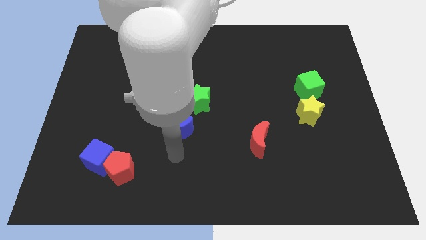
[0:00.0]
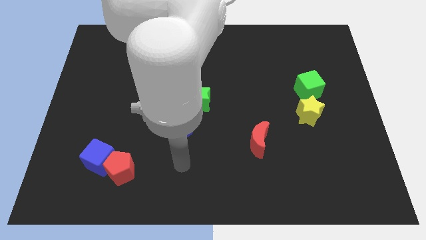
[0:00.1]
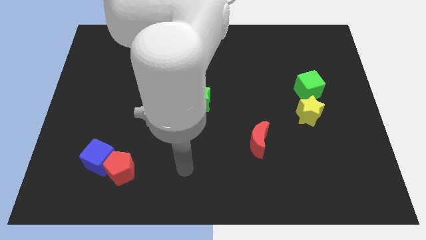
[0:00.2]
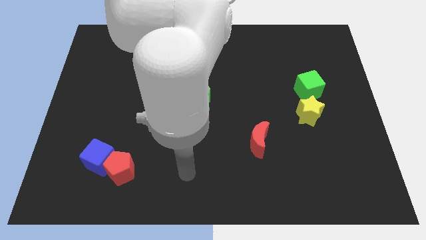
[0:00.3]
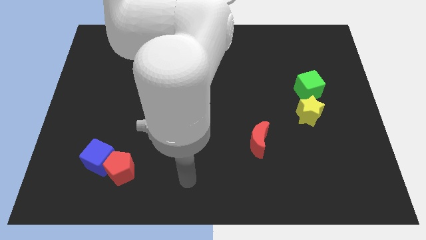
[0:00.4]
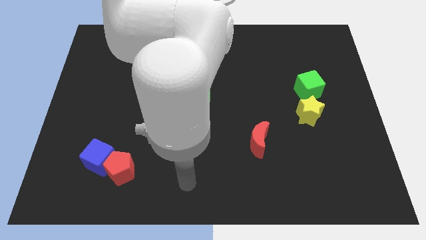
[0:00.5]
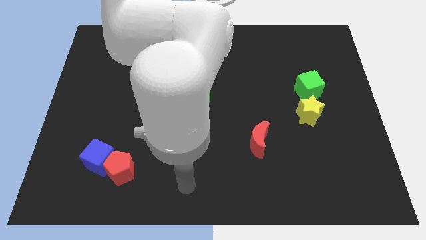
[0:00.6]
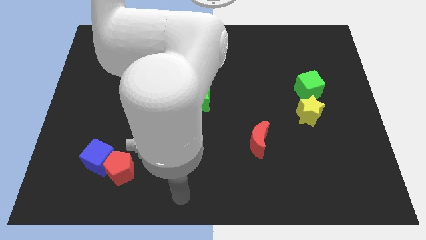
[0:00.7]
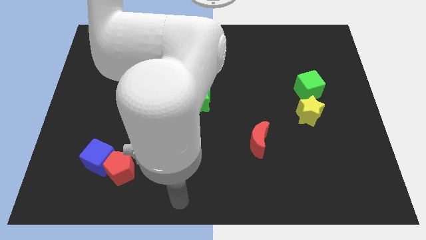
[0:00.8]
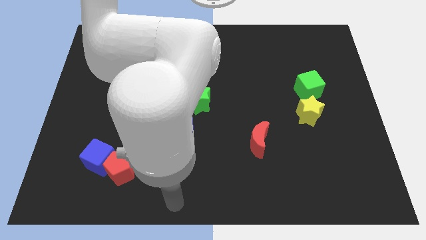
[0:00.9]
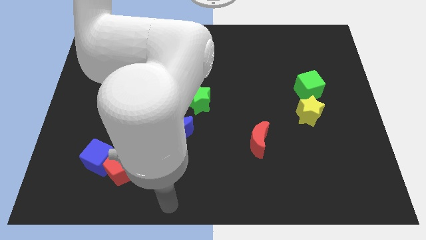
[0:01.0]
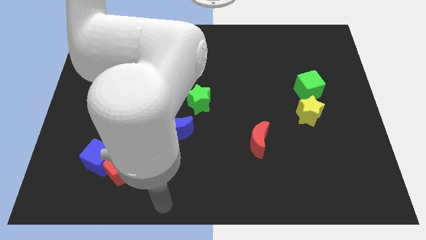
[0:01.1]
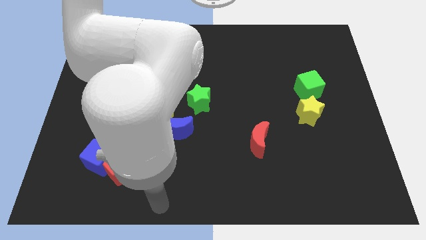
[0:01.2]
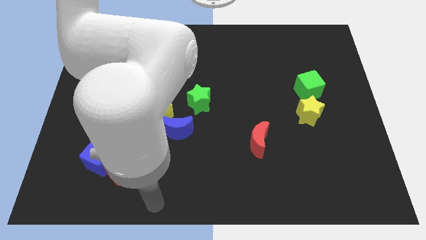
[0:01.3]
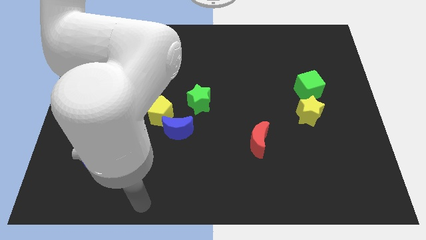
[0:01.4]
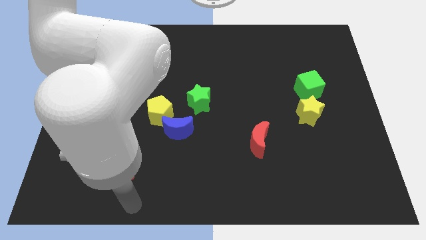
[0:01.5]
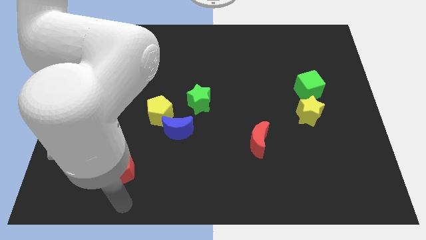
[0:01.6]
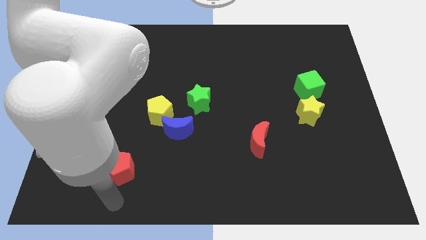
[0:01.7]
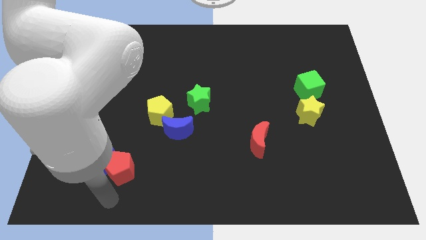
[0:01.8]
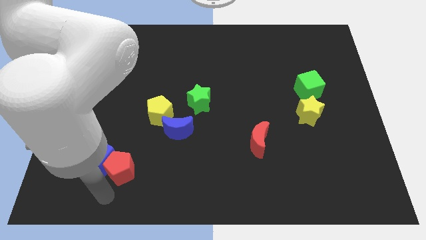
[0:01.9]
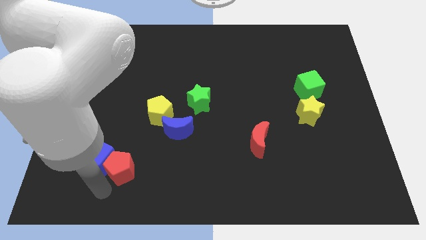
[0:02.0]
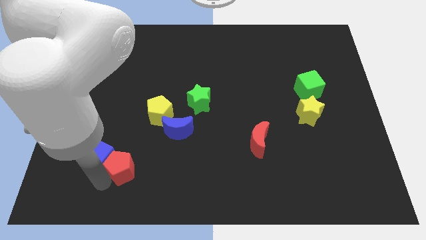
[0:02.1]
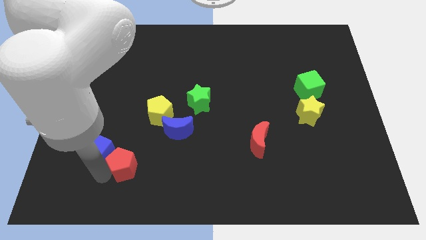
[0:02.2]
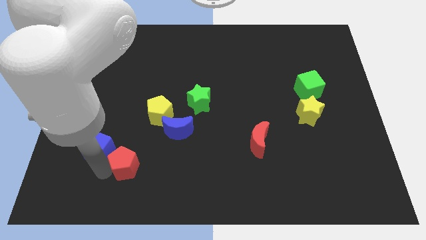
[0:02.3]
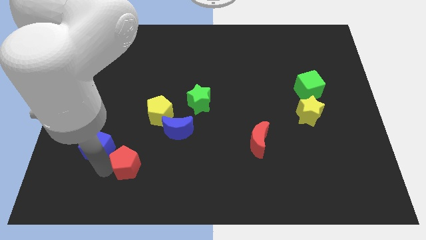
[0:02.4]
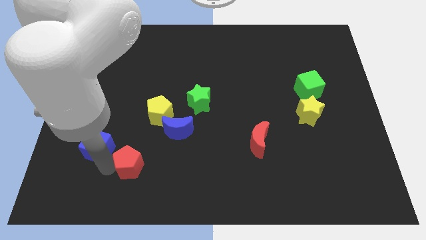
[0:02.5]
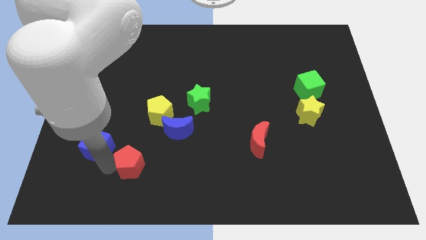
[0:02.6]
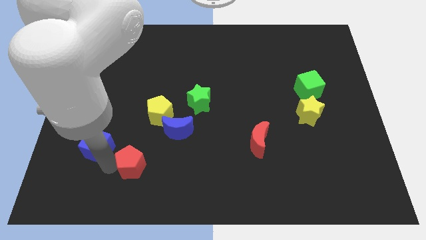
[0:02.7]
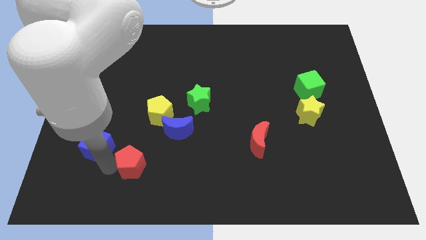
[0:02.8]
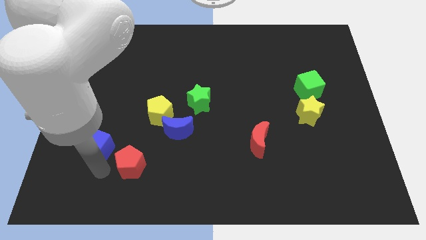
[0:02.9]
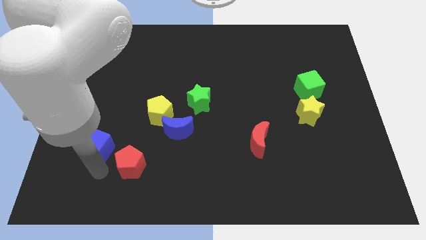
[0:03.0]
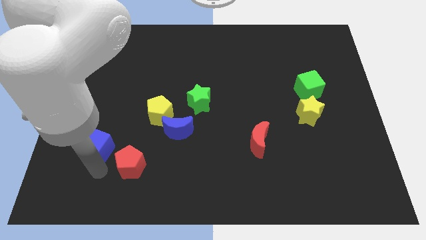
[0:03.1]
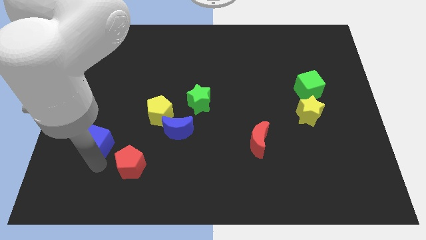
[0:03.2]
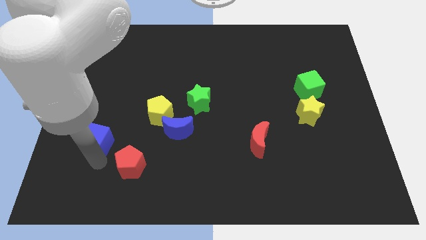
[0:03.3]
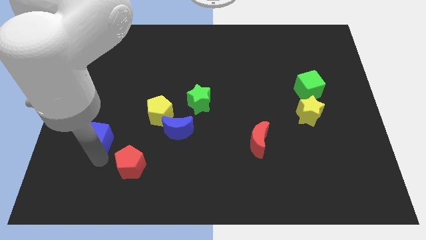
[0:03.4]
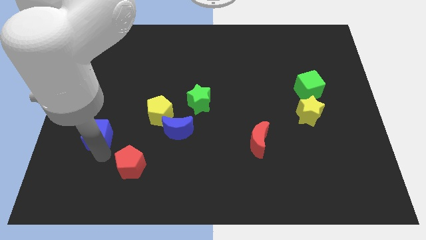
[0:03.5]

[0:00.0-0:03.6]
separate the blue cube and red pentagon to each other

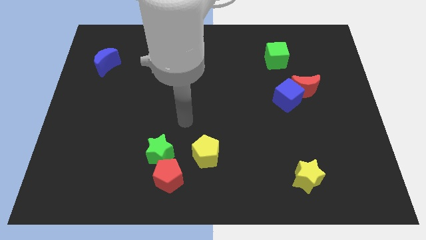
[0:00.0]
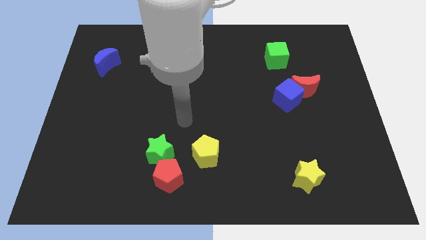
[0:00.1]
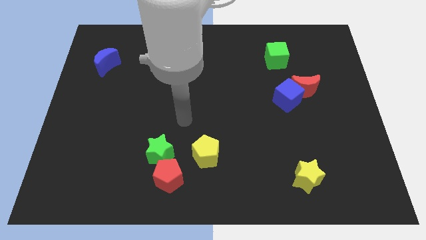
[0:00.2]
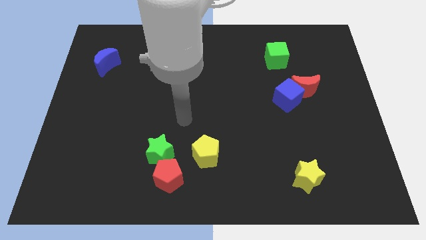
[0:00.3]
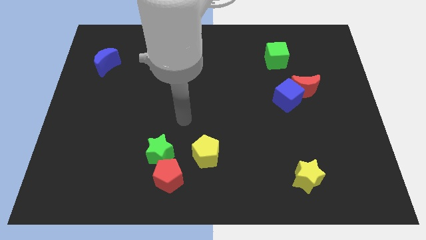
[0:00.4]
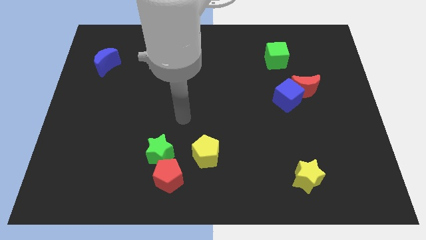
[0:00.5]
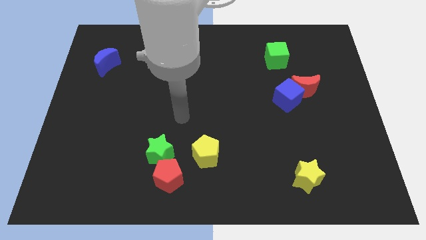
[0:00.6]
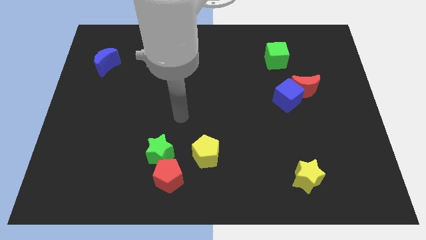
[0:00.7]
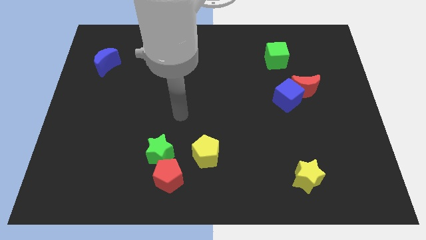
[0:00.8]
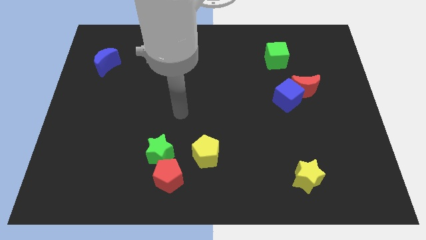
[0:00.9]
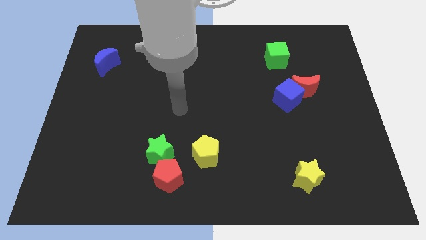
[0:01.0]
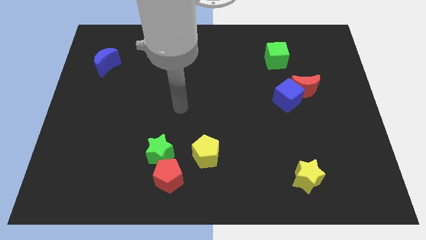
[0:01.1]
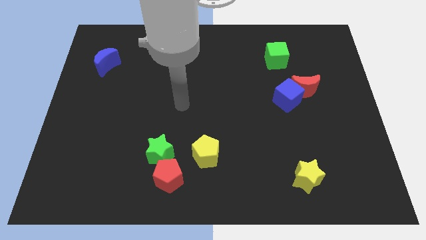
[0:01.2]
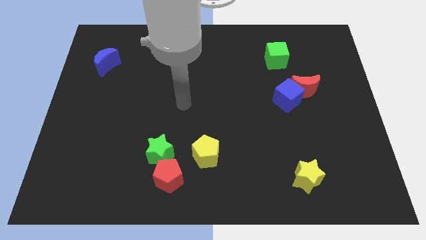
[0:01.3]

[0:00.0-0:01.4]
move your arm slightly upwards

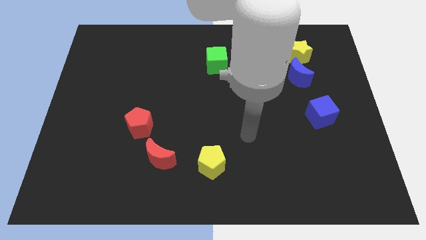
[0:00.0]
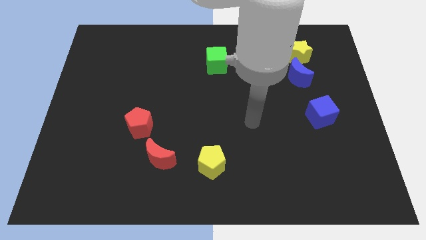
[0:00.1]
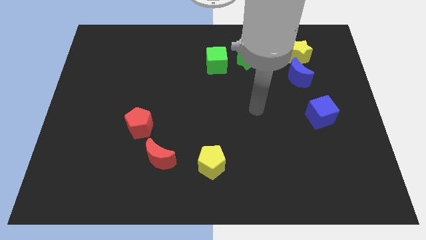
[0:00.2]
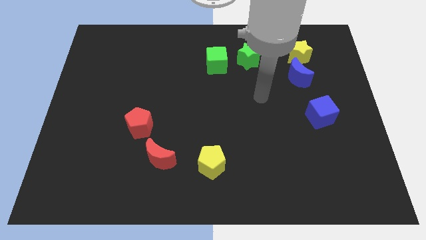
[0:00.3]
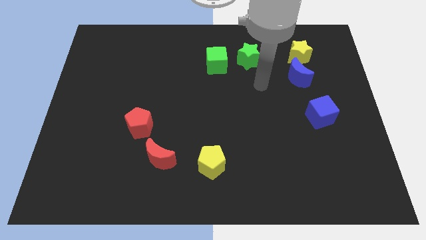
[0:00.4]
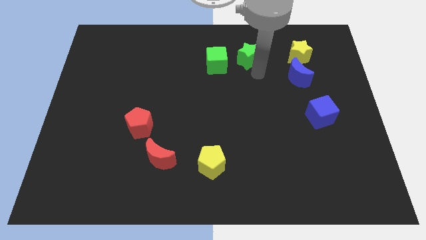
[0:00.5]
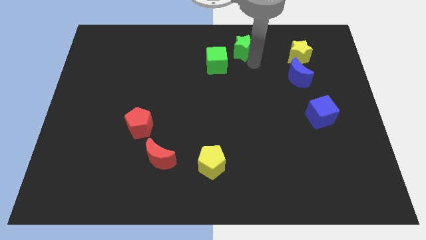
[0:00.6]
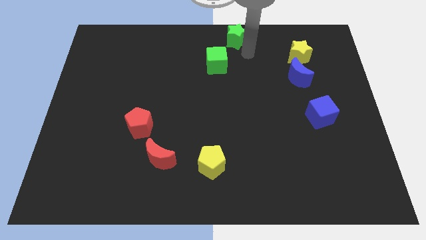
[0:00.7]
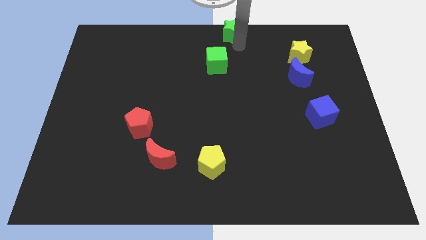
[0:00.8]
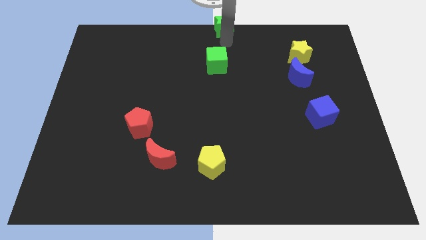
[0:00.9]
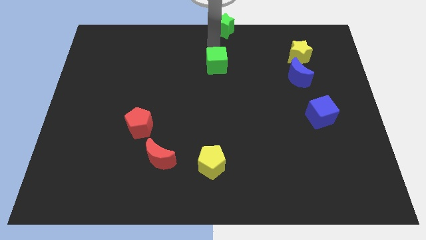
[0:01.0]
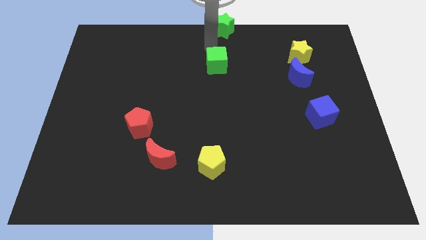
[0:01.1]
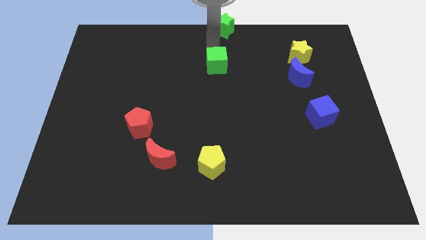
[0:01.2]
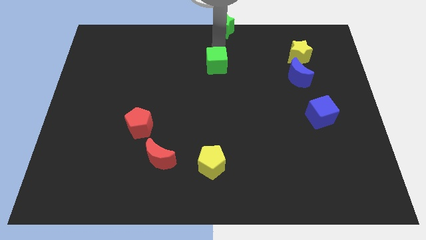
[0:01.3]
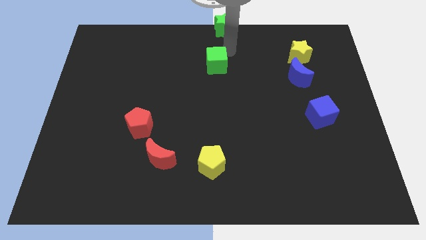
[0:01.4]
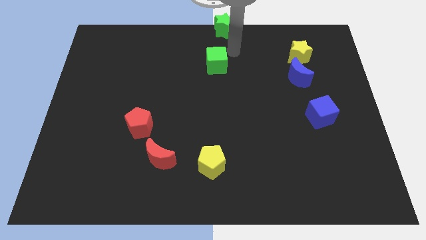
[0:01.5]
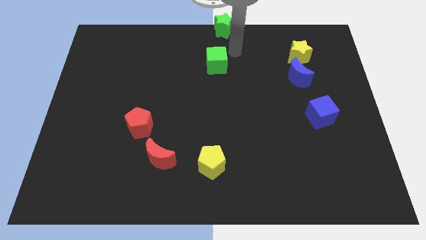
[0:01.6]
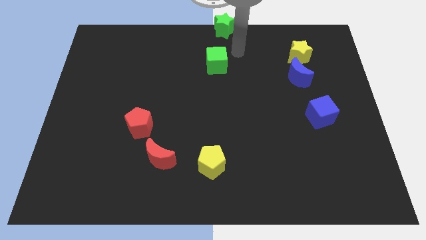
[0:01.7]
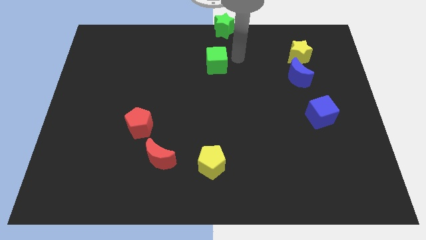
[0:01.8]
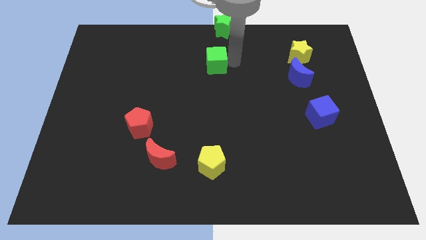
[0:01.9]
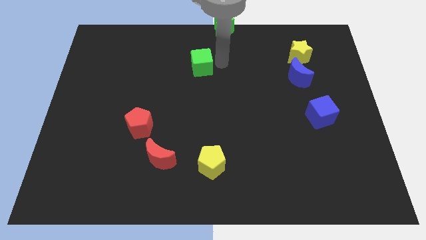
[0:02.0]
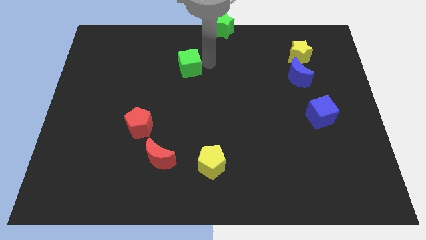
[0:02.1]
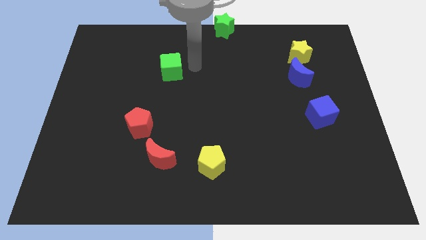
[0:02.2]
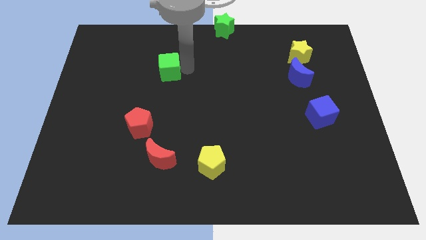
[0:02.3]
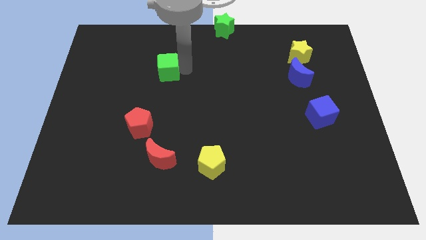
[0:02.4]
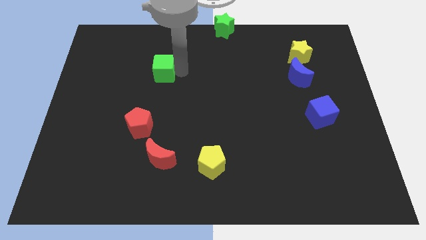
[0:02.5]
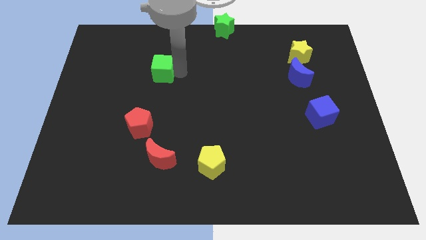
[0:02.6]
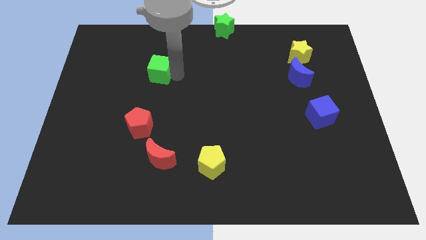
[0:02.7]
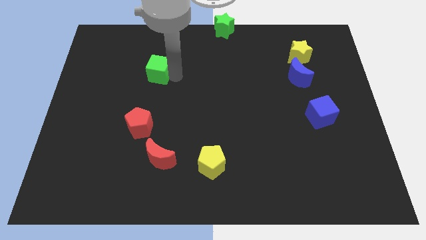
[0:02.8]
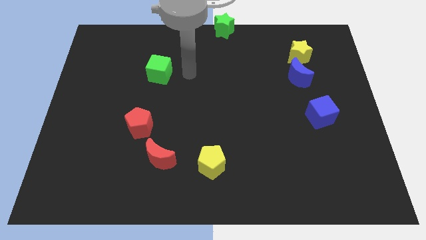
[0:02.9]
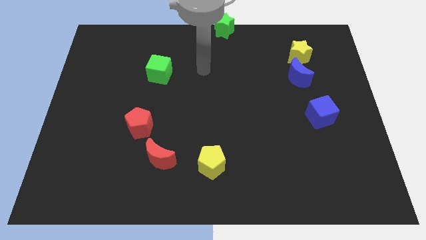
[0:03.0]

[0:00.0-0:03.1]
move the green star to the top center of the board

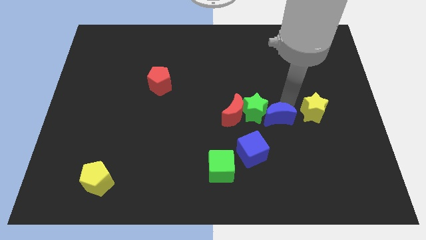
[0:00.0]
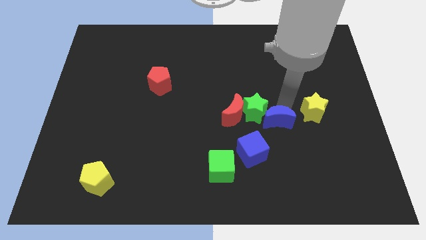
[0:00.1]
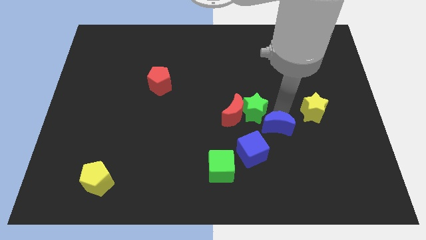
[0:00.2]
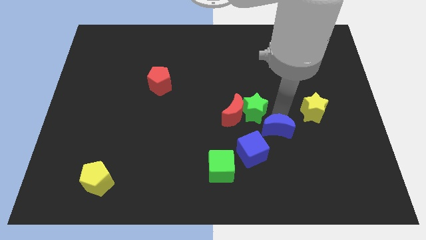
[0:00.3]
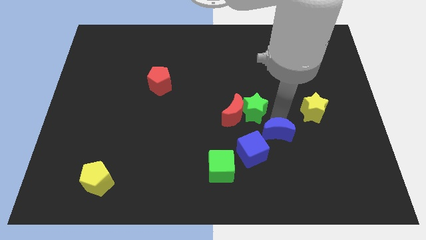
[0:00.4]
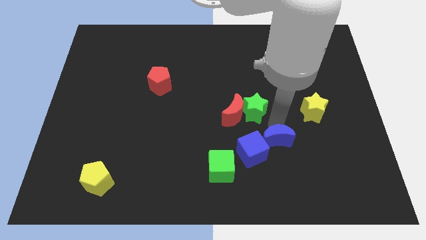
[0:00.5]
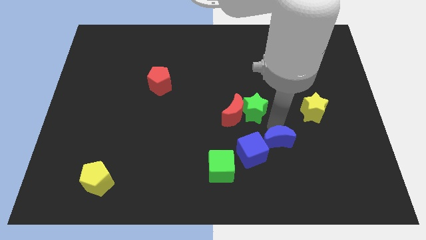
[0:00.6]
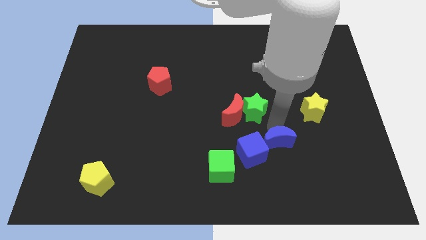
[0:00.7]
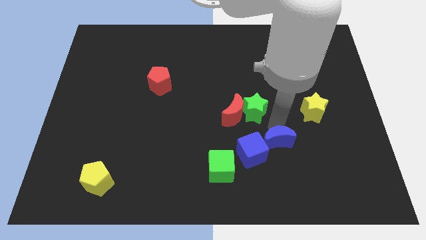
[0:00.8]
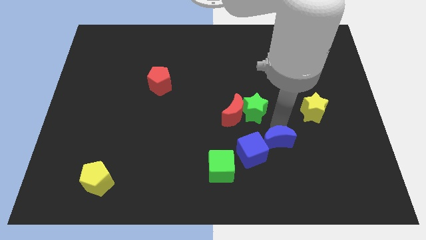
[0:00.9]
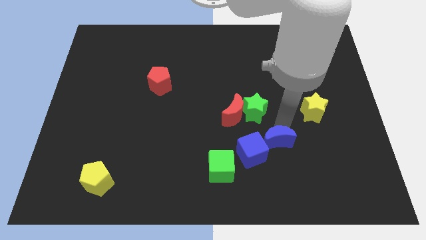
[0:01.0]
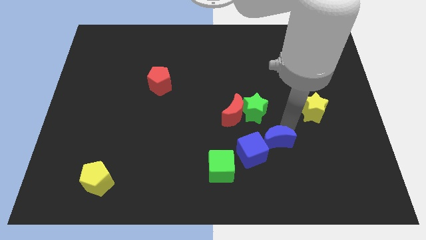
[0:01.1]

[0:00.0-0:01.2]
move the blue crescent into the blue cube
